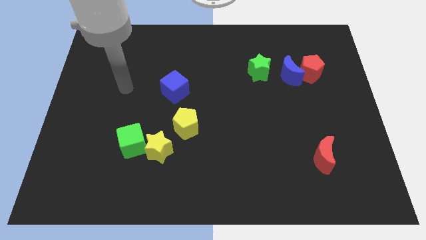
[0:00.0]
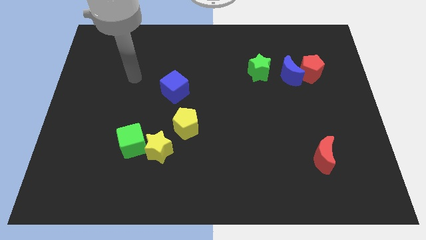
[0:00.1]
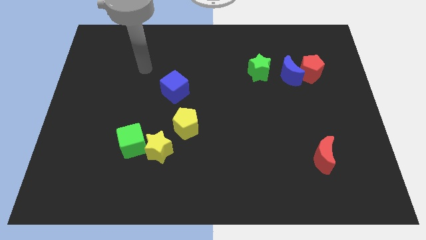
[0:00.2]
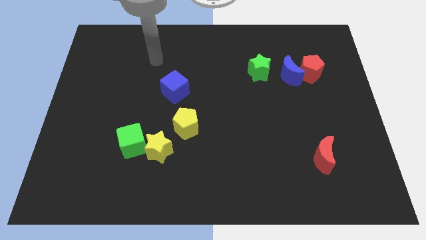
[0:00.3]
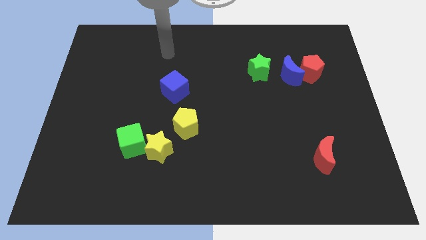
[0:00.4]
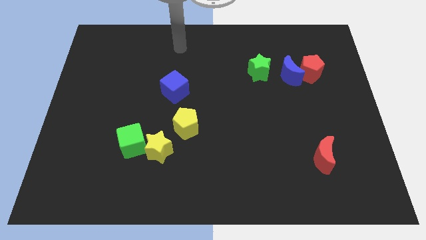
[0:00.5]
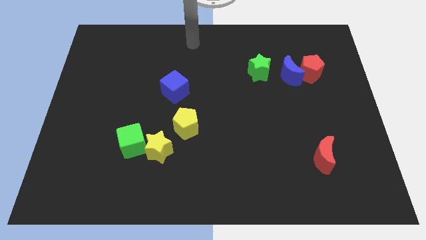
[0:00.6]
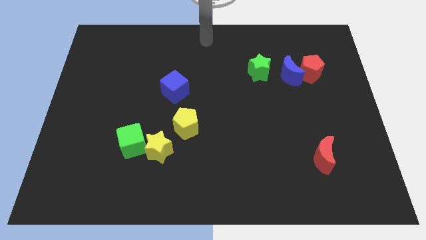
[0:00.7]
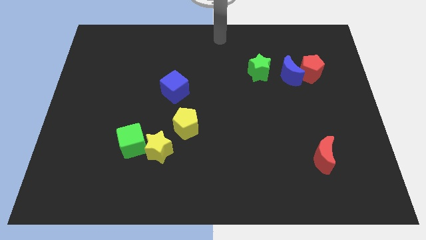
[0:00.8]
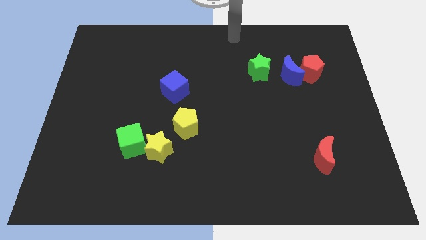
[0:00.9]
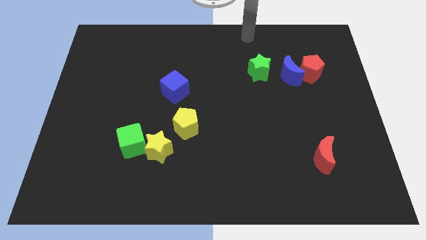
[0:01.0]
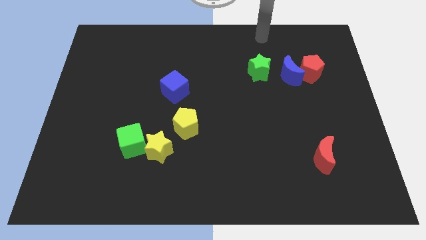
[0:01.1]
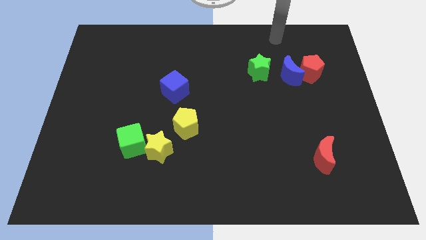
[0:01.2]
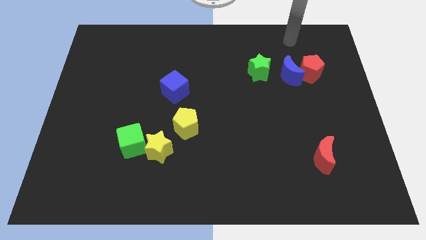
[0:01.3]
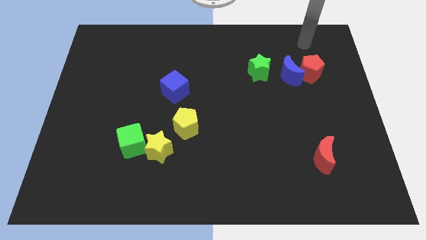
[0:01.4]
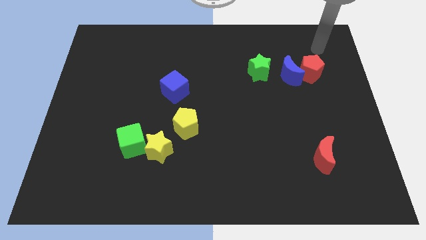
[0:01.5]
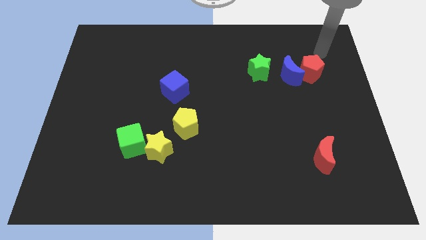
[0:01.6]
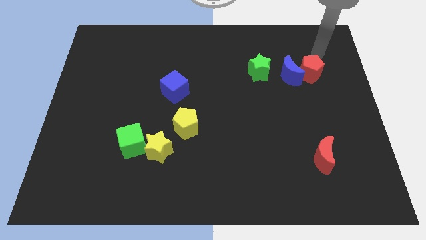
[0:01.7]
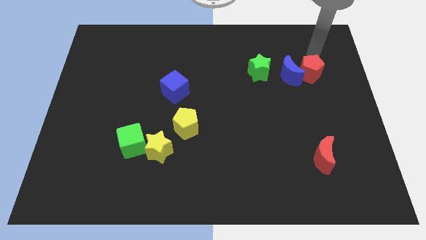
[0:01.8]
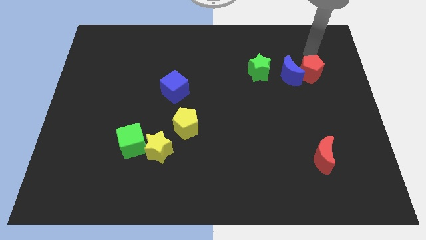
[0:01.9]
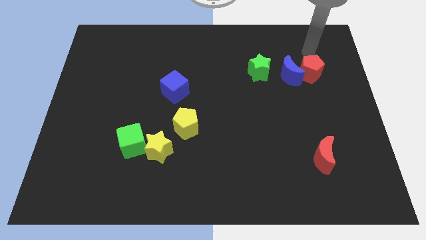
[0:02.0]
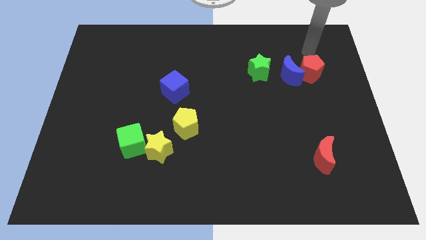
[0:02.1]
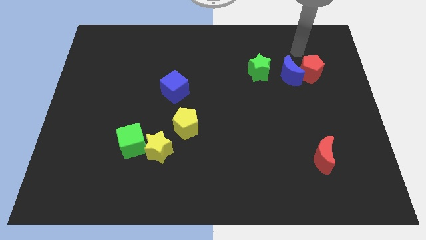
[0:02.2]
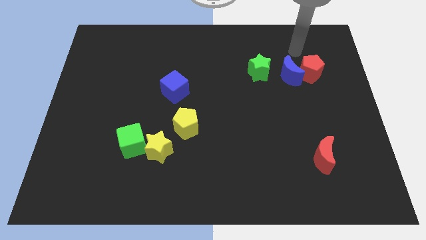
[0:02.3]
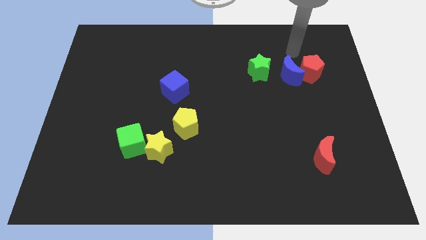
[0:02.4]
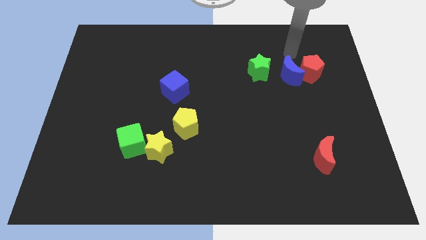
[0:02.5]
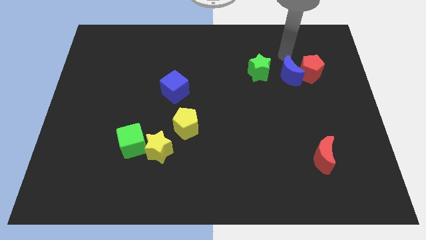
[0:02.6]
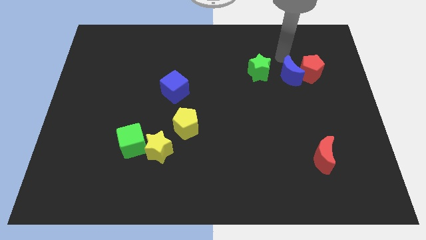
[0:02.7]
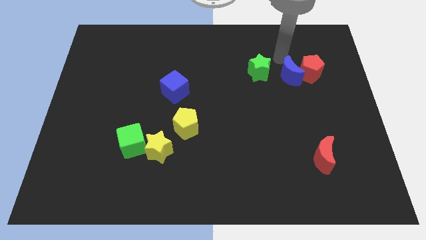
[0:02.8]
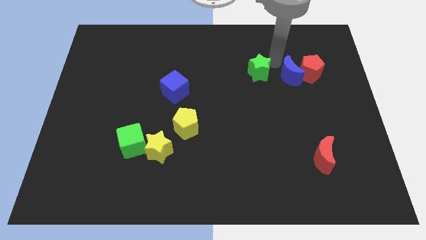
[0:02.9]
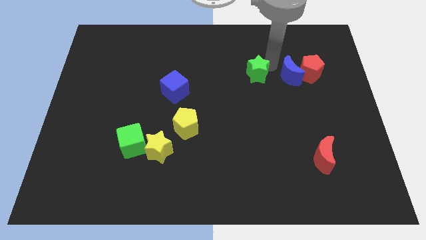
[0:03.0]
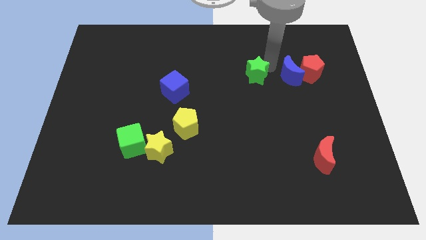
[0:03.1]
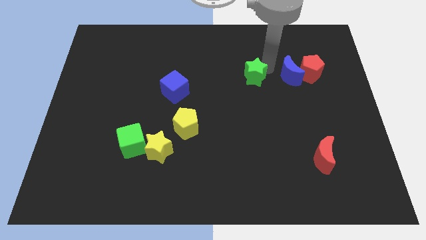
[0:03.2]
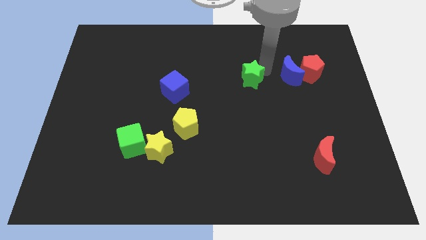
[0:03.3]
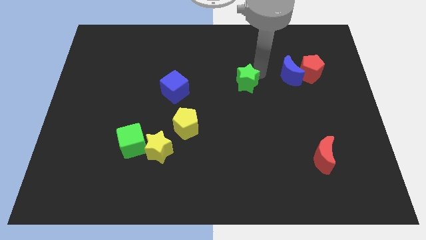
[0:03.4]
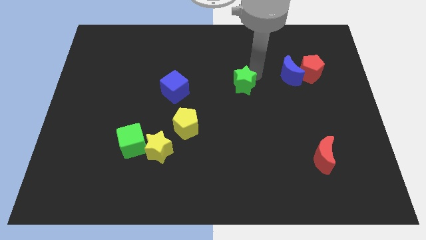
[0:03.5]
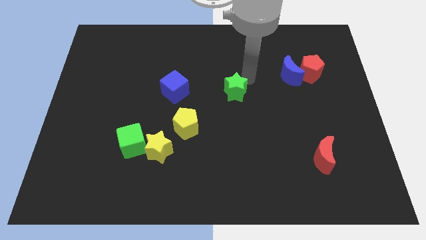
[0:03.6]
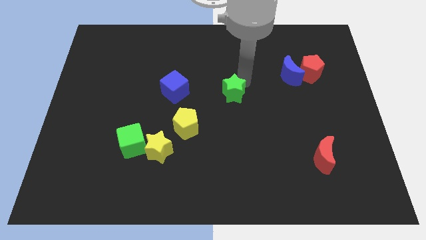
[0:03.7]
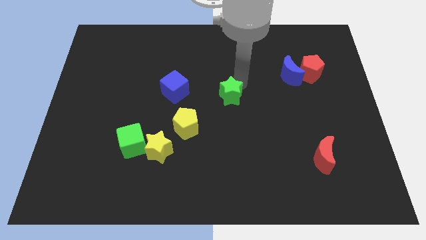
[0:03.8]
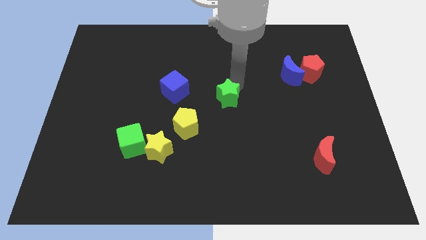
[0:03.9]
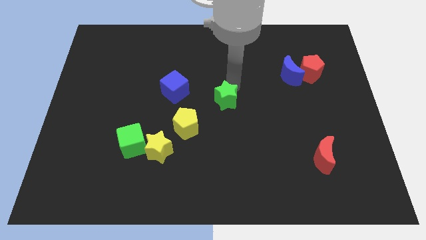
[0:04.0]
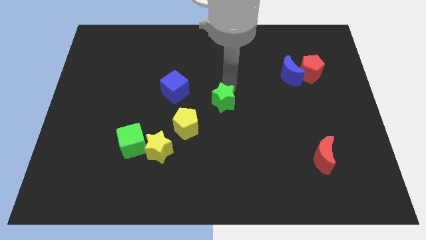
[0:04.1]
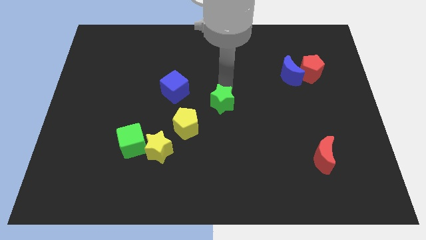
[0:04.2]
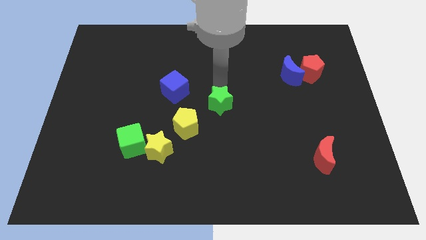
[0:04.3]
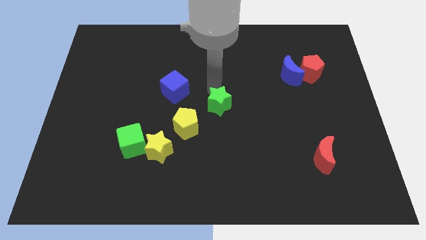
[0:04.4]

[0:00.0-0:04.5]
push the green star towards the yellow pentagon

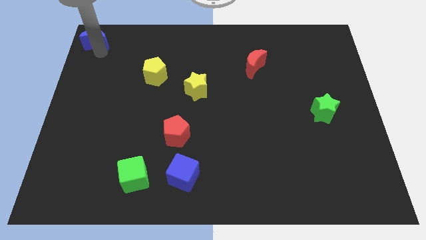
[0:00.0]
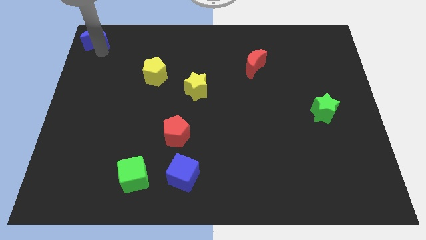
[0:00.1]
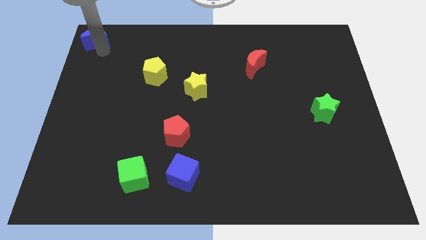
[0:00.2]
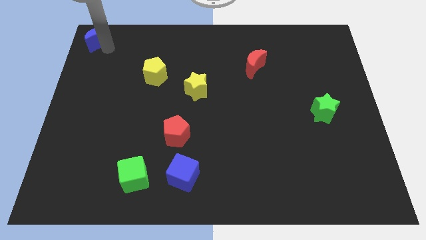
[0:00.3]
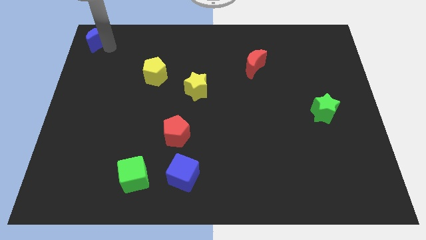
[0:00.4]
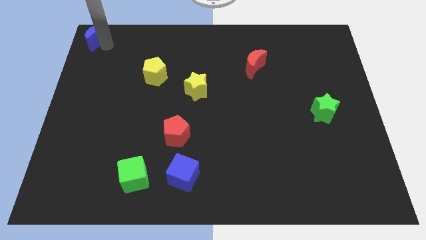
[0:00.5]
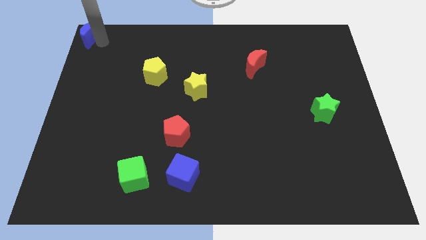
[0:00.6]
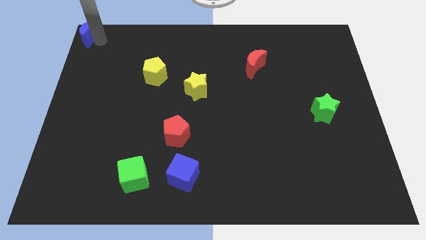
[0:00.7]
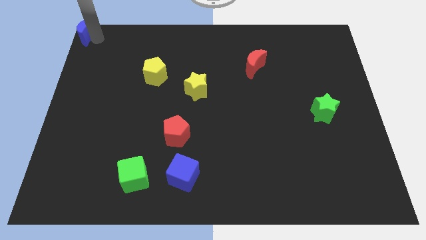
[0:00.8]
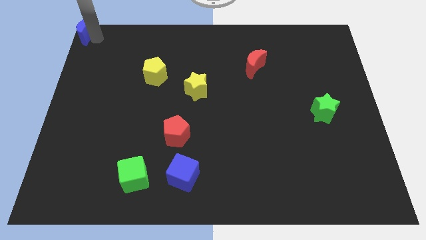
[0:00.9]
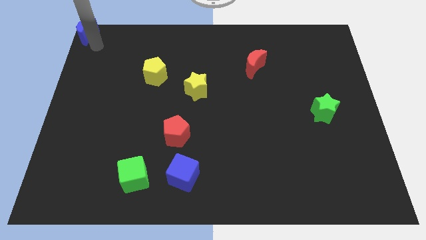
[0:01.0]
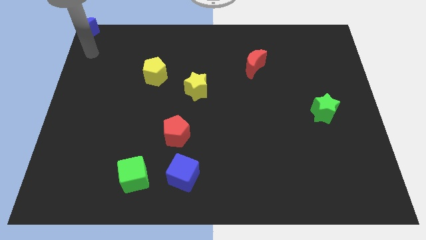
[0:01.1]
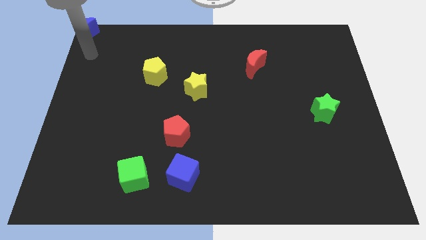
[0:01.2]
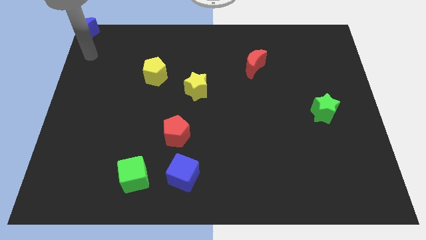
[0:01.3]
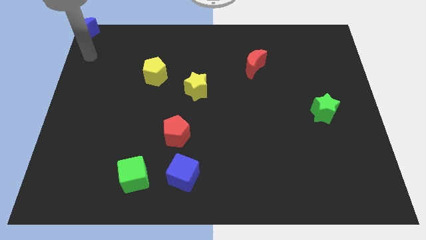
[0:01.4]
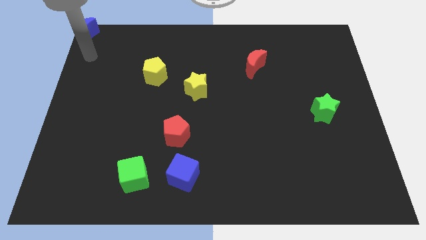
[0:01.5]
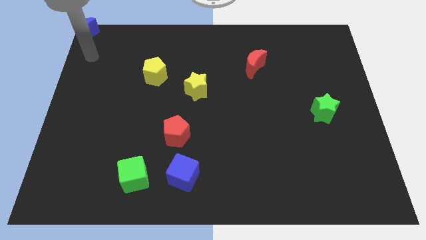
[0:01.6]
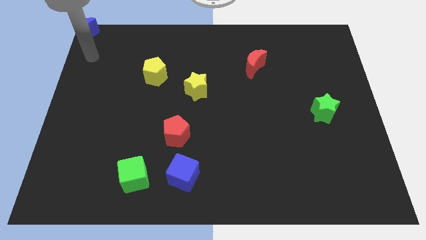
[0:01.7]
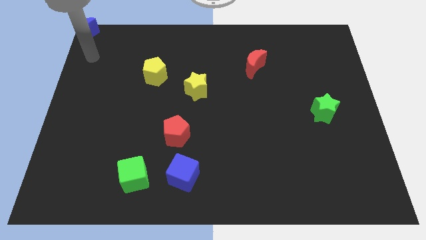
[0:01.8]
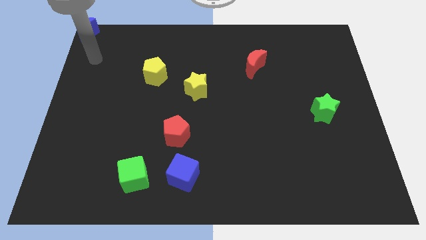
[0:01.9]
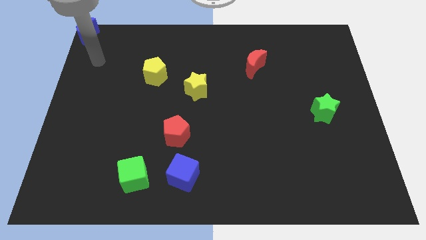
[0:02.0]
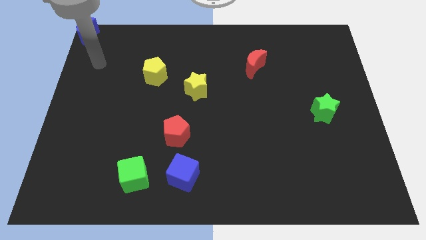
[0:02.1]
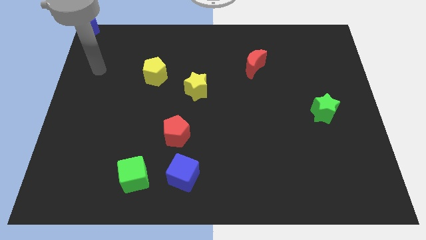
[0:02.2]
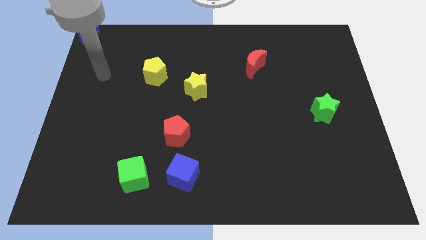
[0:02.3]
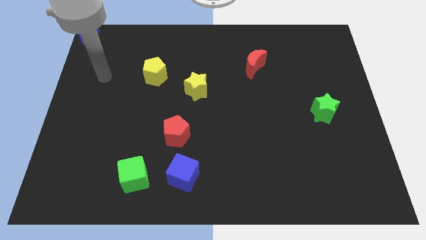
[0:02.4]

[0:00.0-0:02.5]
move your arm away from the blue moon

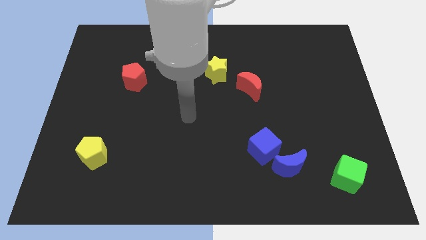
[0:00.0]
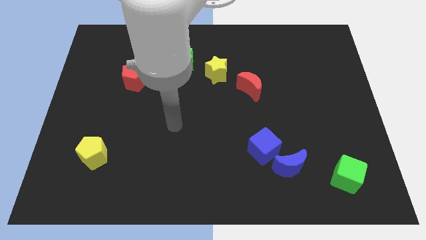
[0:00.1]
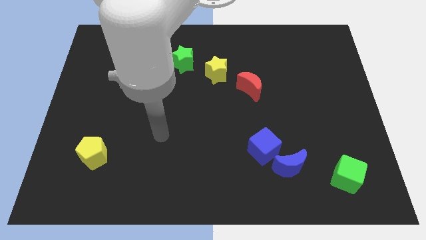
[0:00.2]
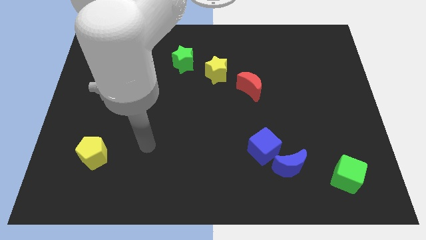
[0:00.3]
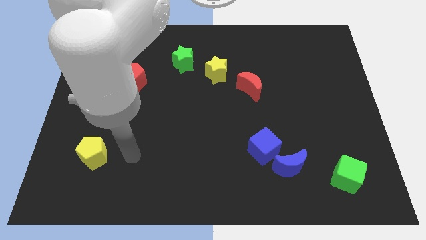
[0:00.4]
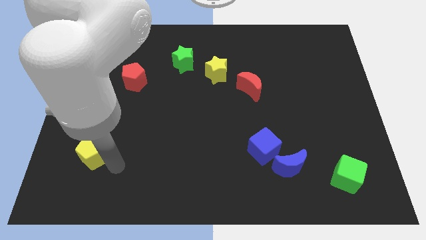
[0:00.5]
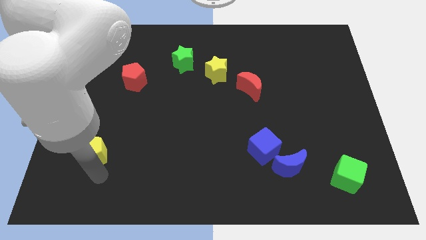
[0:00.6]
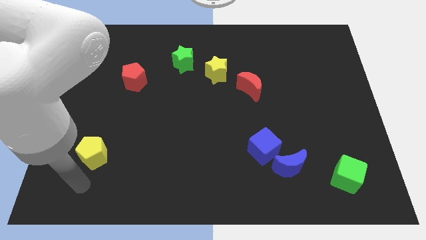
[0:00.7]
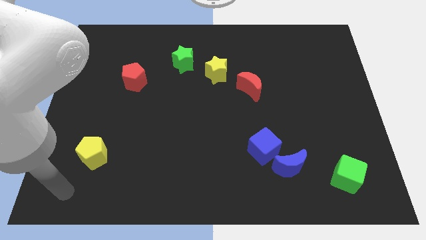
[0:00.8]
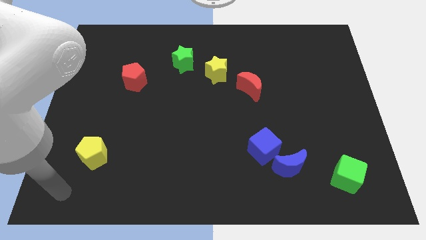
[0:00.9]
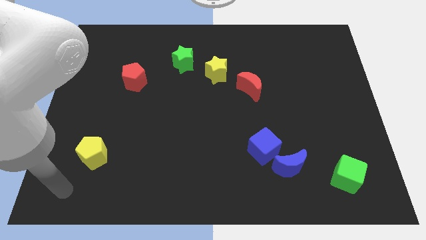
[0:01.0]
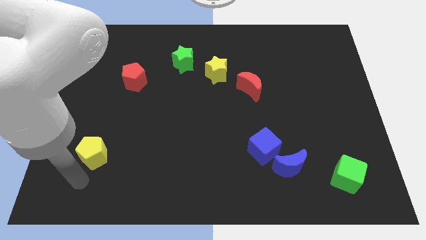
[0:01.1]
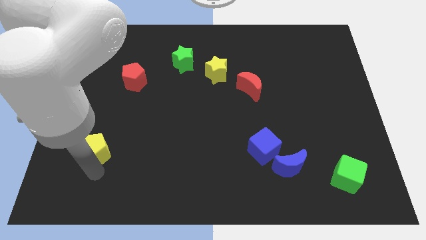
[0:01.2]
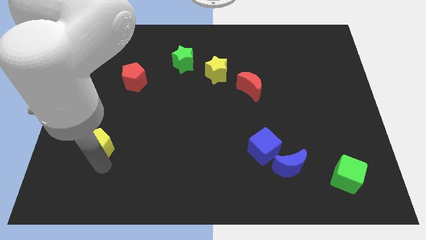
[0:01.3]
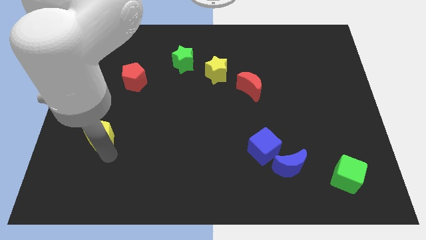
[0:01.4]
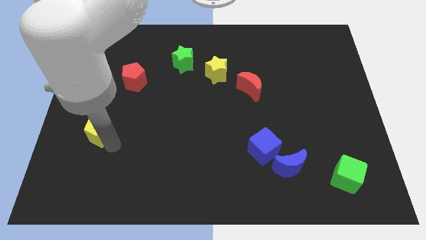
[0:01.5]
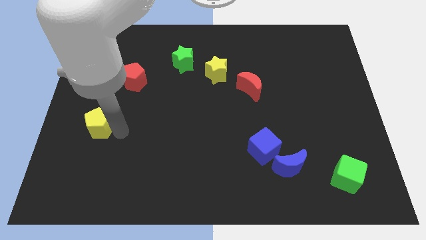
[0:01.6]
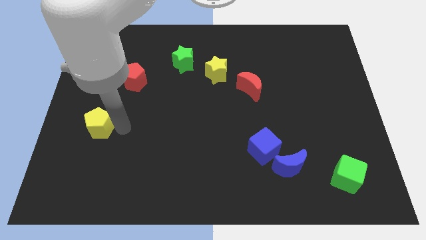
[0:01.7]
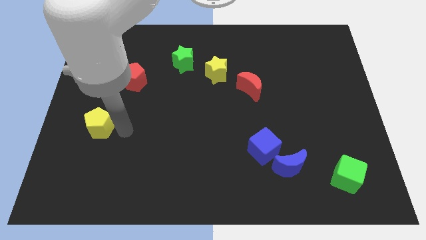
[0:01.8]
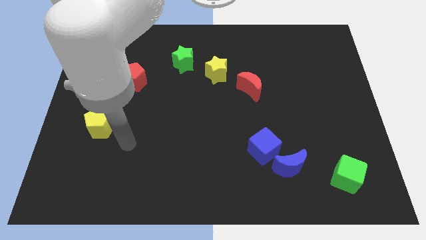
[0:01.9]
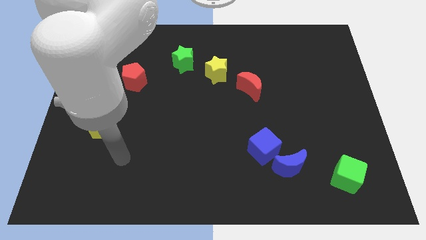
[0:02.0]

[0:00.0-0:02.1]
move the yellow pentagon towards red pentagon
